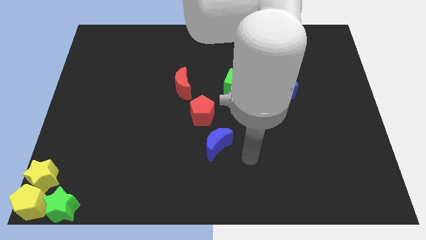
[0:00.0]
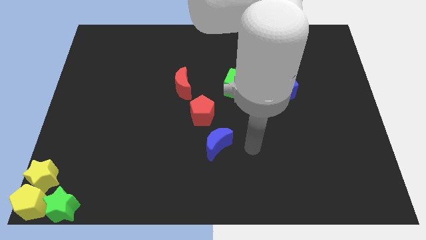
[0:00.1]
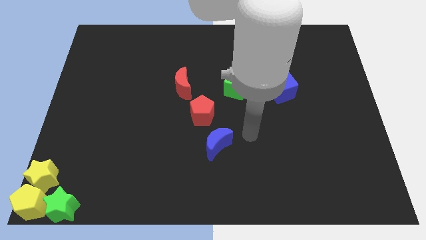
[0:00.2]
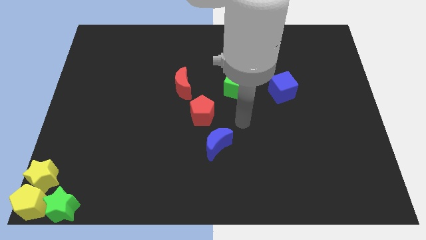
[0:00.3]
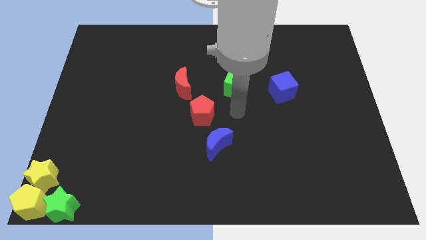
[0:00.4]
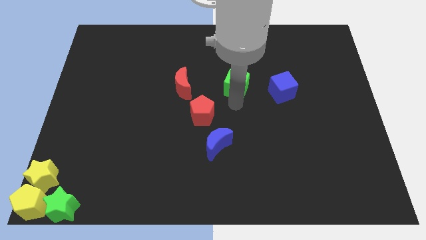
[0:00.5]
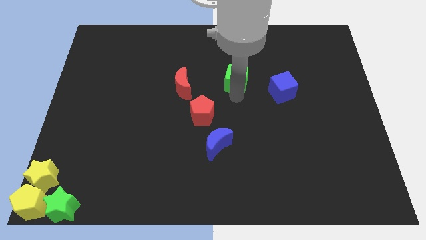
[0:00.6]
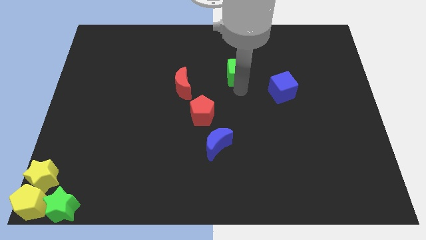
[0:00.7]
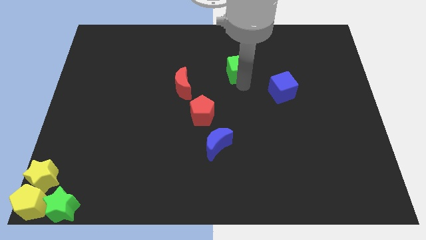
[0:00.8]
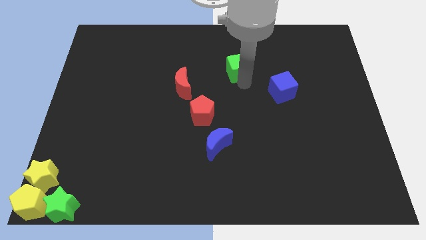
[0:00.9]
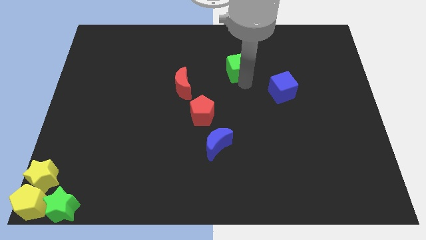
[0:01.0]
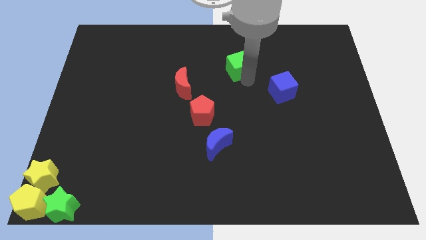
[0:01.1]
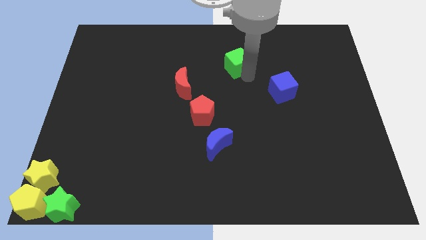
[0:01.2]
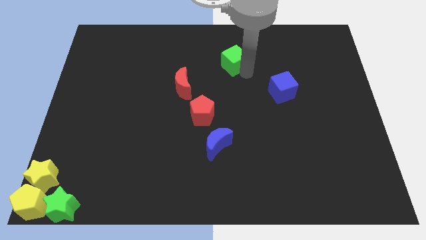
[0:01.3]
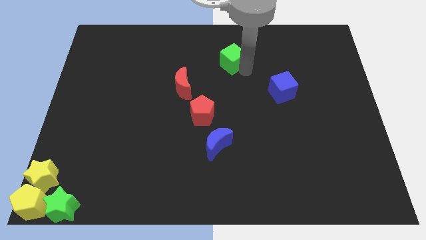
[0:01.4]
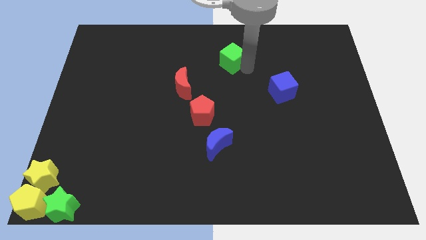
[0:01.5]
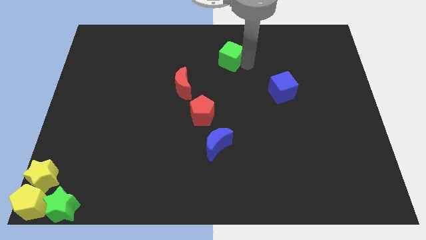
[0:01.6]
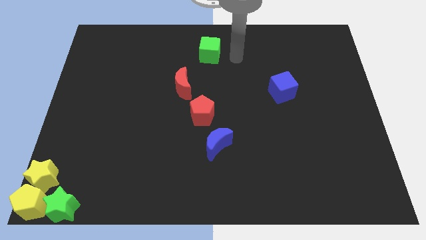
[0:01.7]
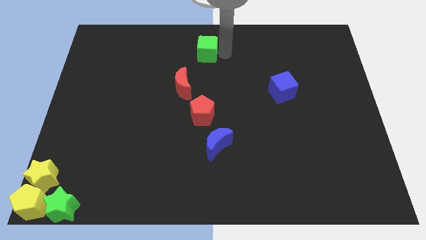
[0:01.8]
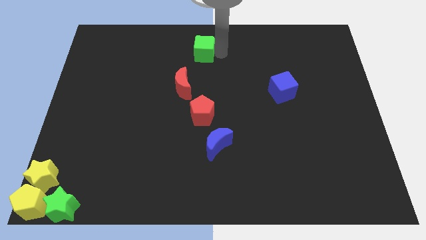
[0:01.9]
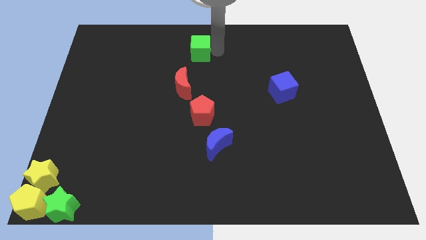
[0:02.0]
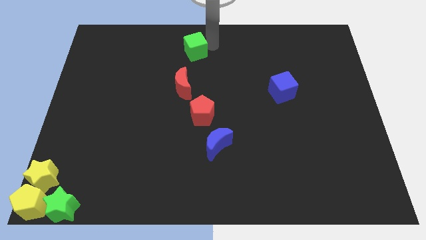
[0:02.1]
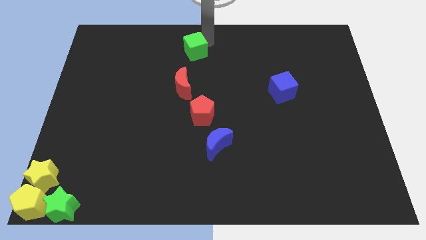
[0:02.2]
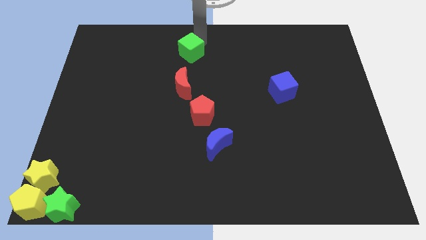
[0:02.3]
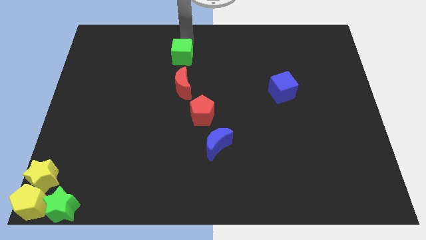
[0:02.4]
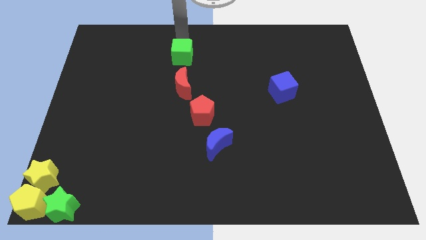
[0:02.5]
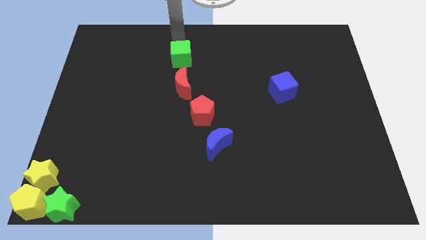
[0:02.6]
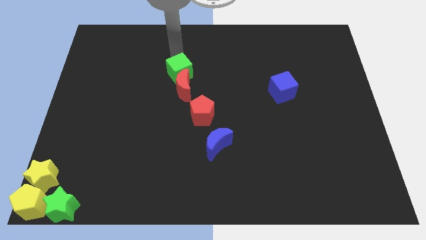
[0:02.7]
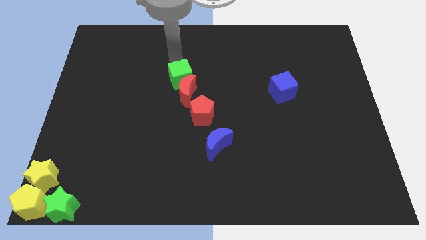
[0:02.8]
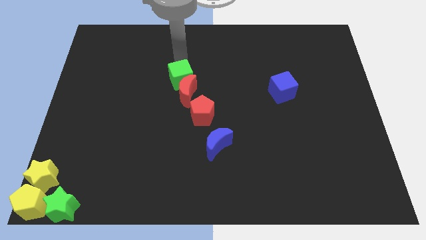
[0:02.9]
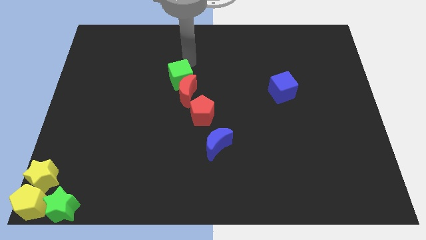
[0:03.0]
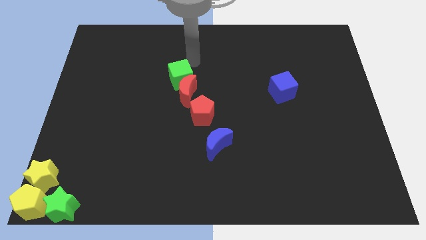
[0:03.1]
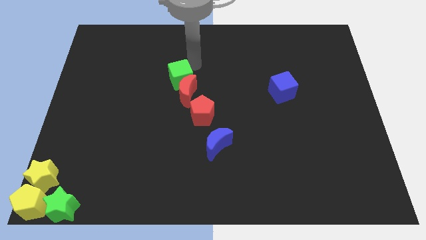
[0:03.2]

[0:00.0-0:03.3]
push the green cube into the red moon

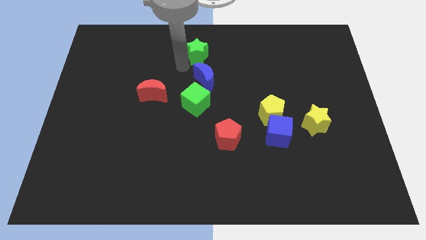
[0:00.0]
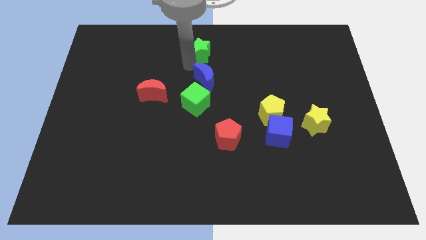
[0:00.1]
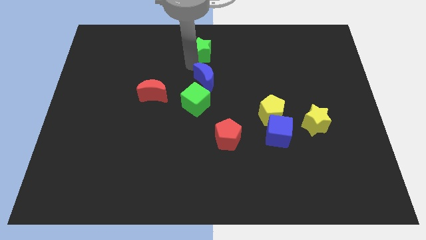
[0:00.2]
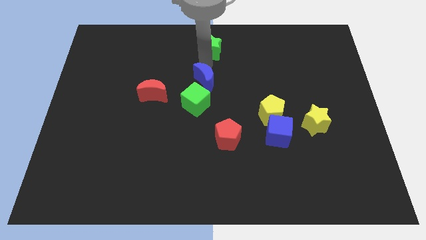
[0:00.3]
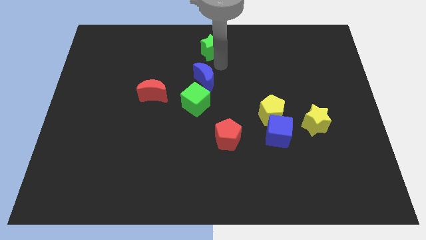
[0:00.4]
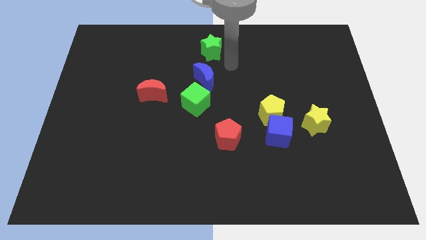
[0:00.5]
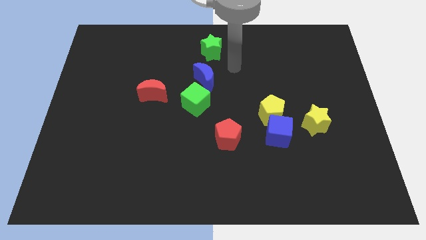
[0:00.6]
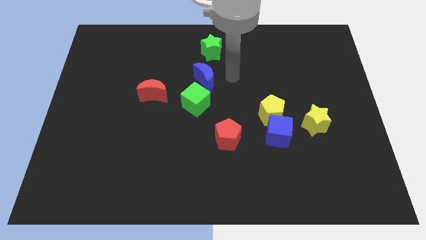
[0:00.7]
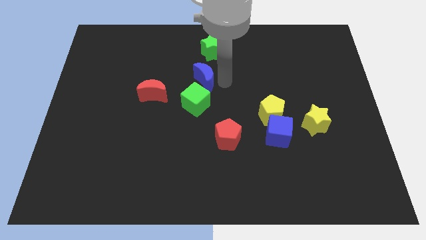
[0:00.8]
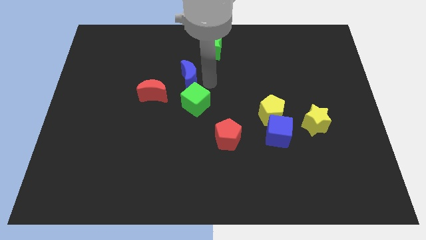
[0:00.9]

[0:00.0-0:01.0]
move your arm to the right of blue crescent

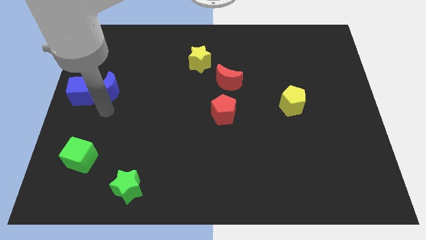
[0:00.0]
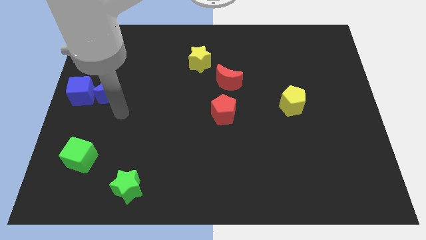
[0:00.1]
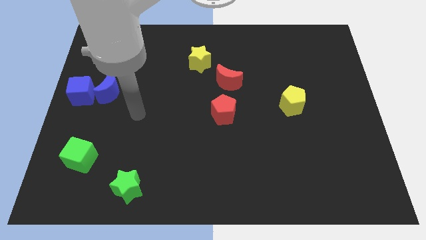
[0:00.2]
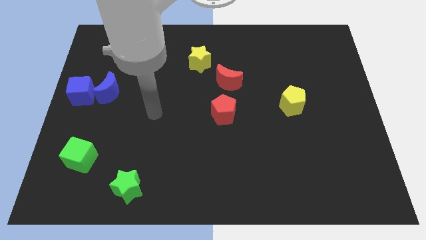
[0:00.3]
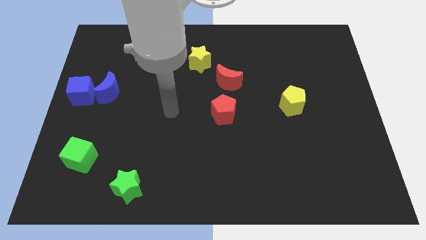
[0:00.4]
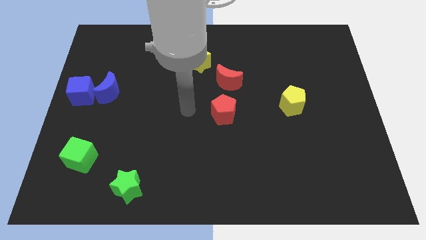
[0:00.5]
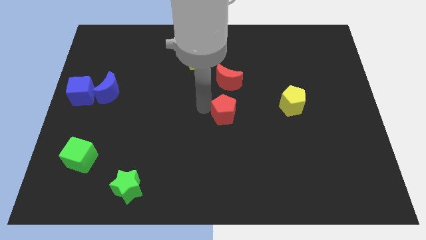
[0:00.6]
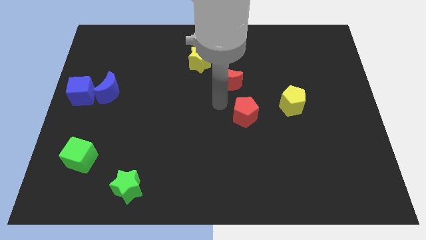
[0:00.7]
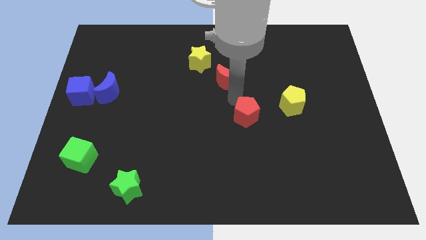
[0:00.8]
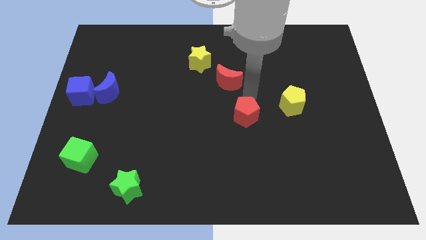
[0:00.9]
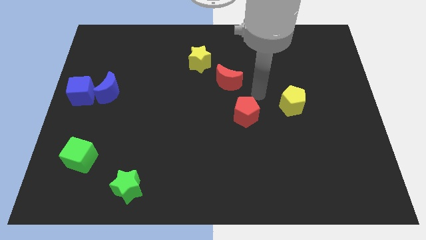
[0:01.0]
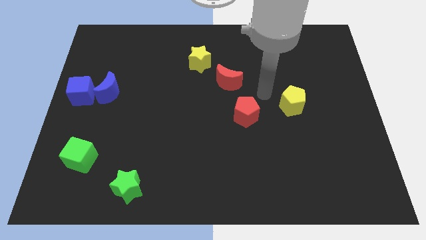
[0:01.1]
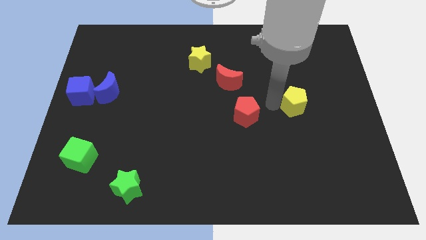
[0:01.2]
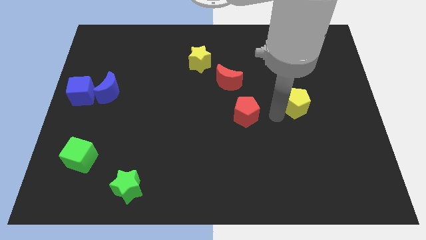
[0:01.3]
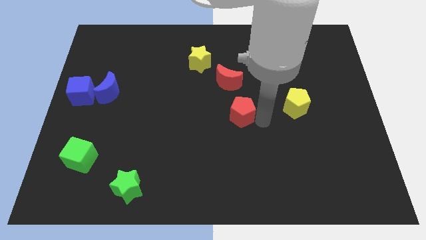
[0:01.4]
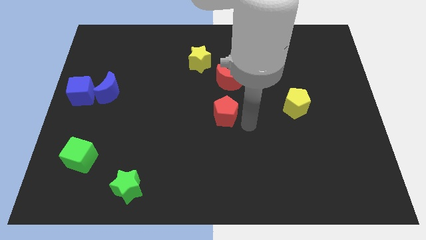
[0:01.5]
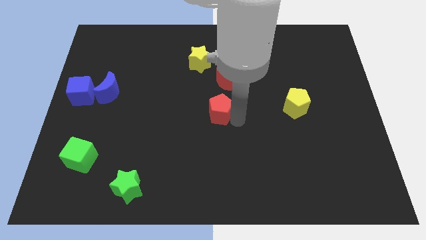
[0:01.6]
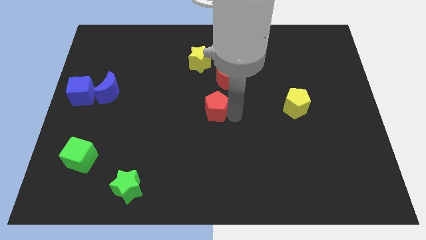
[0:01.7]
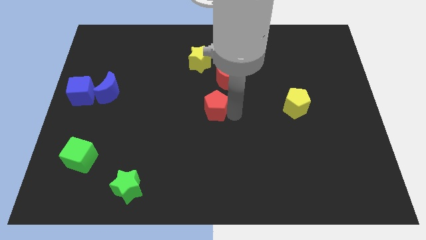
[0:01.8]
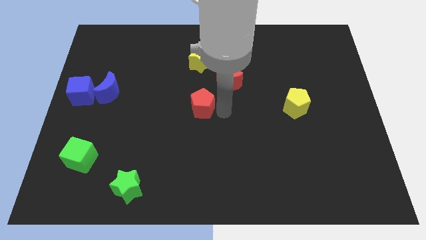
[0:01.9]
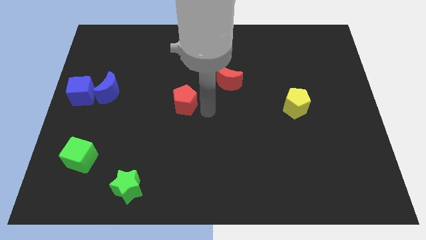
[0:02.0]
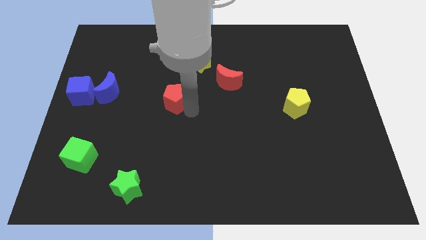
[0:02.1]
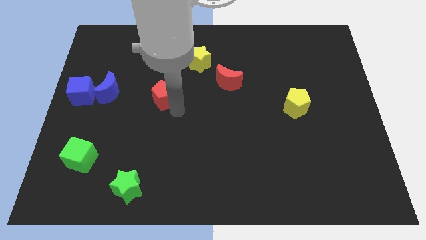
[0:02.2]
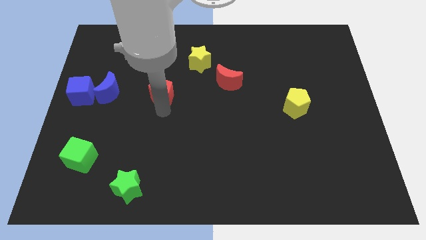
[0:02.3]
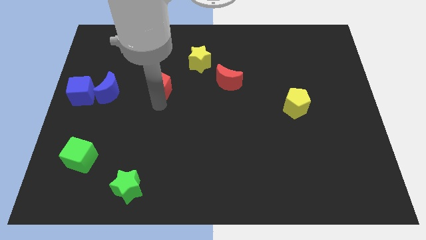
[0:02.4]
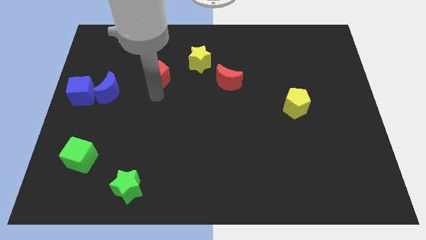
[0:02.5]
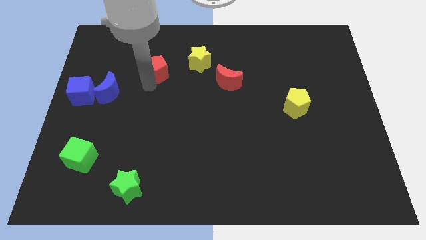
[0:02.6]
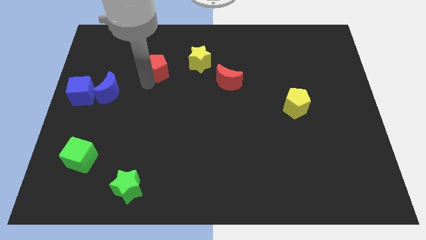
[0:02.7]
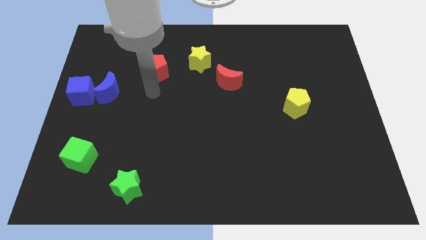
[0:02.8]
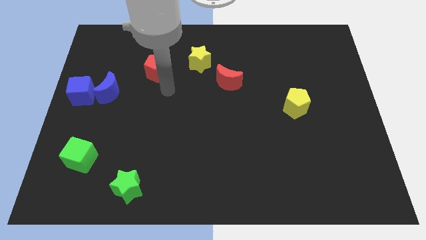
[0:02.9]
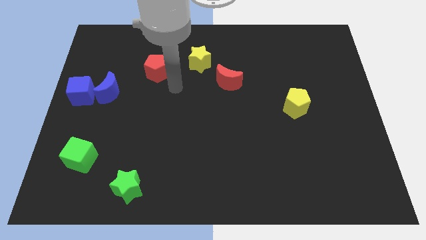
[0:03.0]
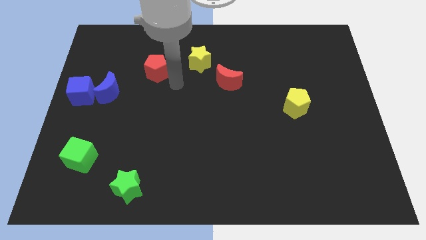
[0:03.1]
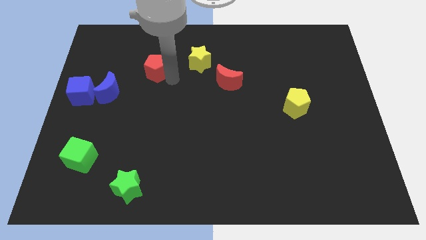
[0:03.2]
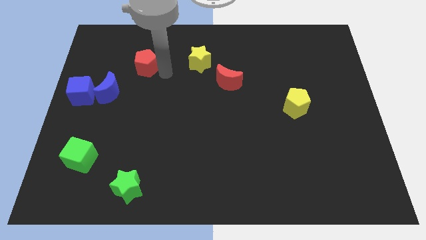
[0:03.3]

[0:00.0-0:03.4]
place the red pentagon parallel to yellow star

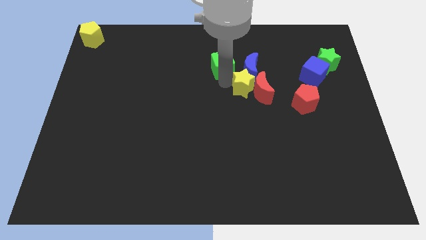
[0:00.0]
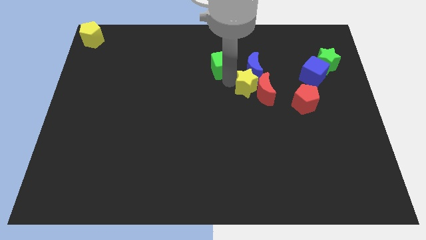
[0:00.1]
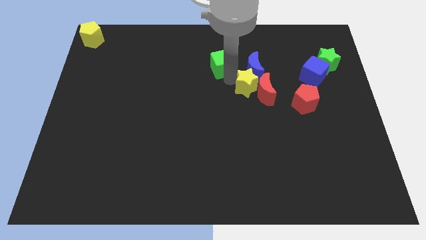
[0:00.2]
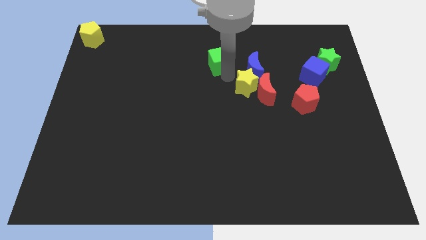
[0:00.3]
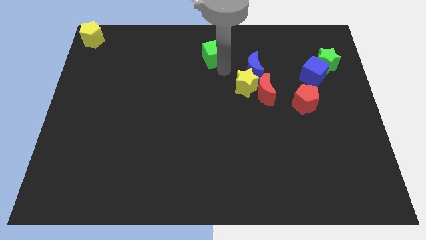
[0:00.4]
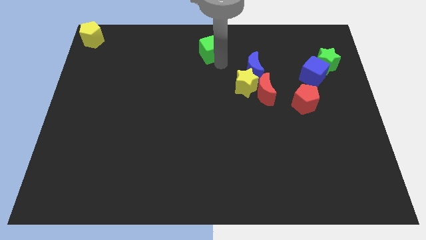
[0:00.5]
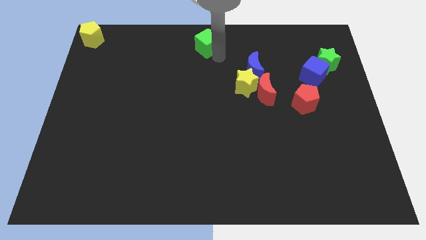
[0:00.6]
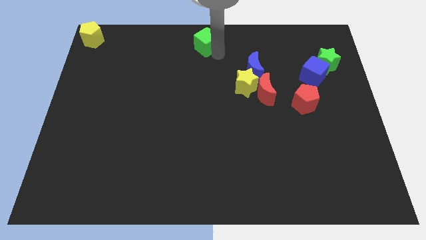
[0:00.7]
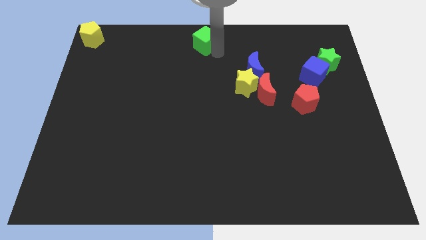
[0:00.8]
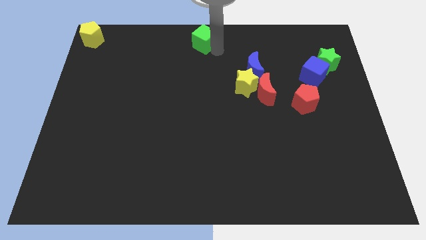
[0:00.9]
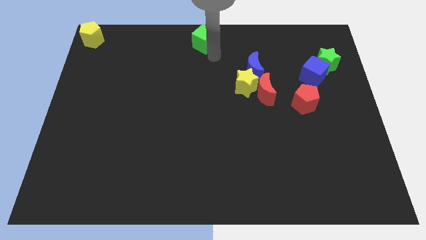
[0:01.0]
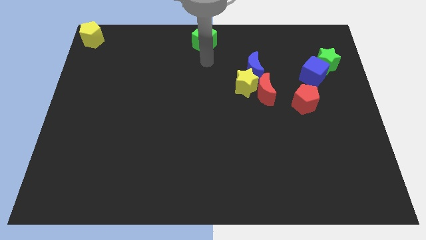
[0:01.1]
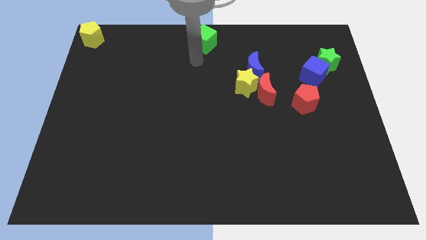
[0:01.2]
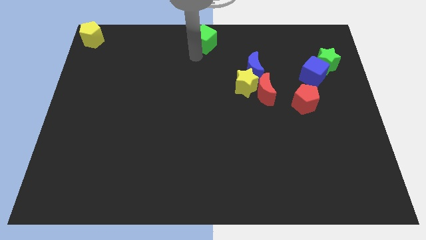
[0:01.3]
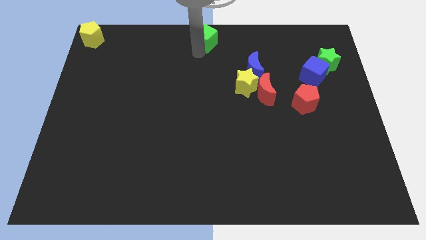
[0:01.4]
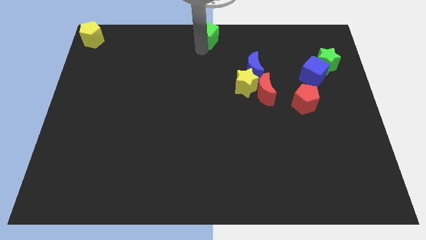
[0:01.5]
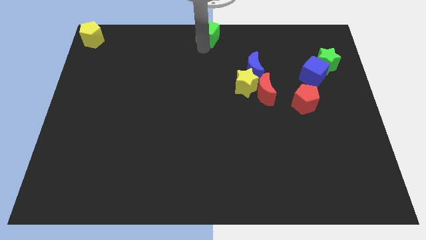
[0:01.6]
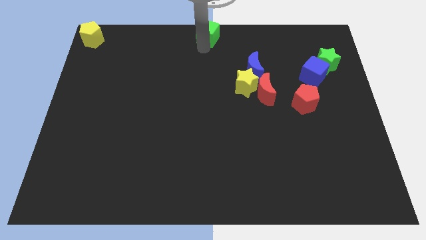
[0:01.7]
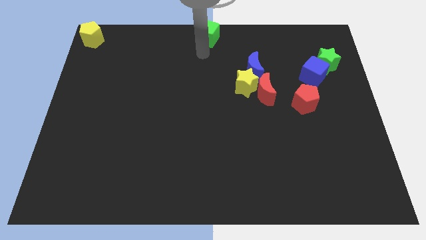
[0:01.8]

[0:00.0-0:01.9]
place the green cube at the top center of the board
